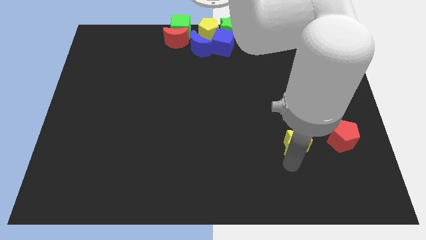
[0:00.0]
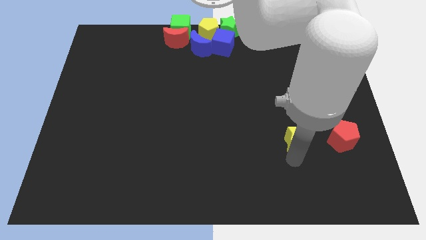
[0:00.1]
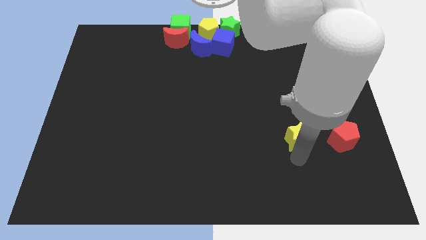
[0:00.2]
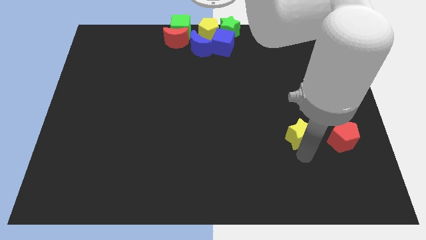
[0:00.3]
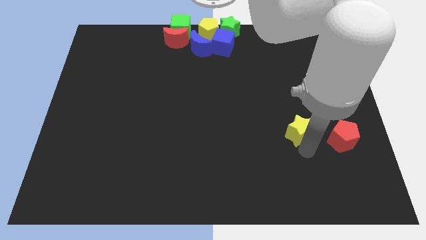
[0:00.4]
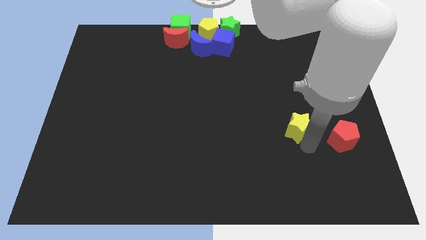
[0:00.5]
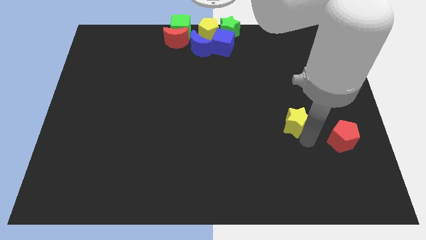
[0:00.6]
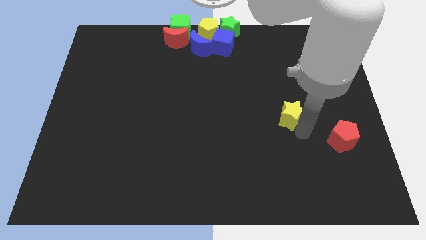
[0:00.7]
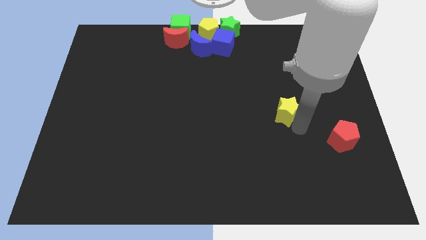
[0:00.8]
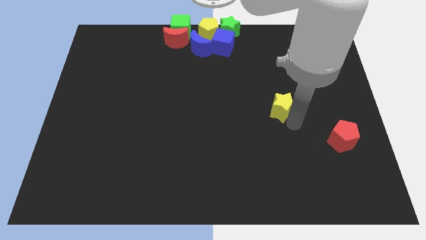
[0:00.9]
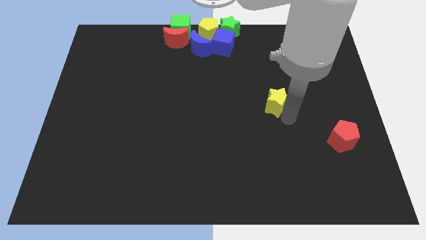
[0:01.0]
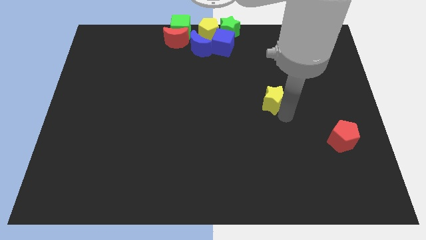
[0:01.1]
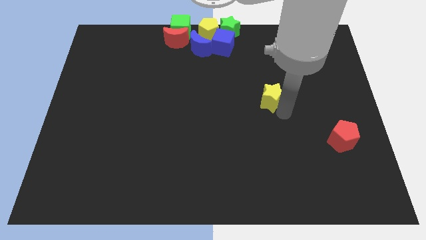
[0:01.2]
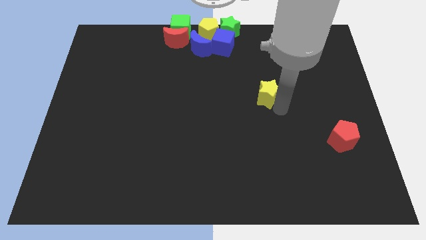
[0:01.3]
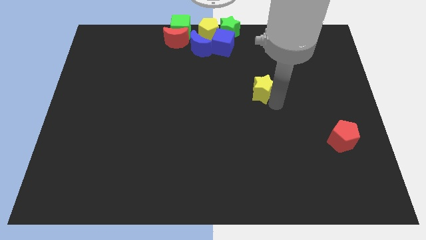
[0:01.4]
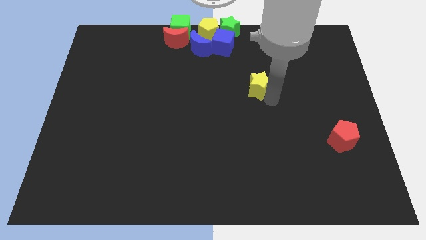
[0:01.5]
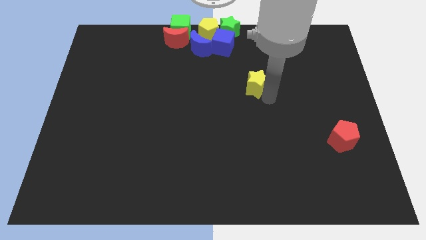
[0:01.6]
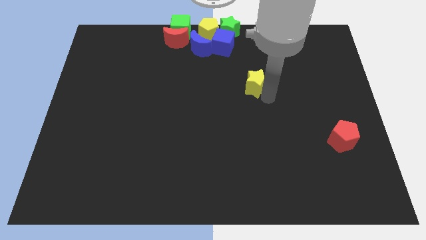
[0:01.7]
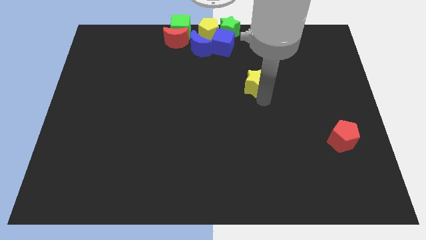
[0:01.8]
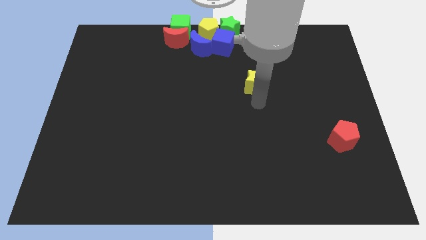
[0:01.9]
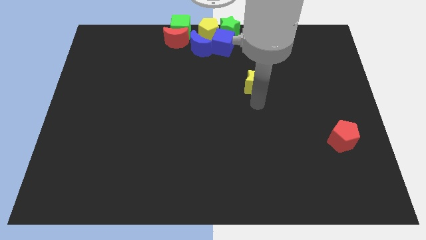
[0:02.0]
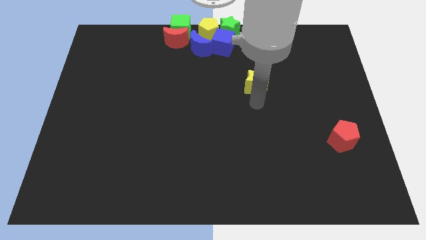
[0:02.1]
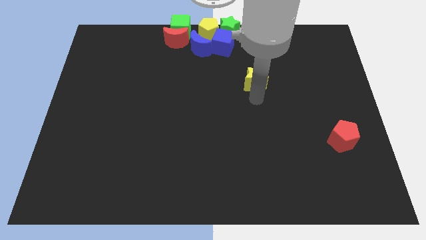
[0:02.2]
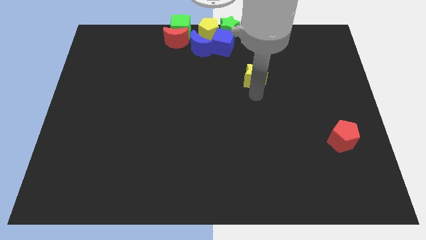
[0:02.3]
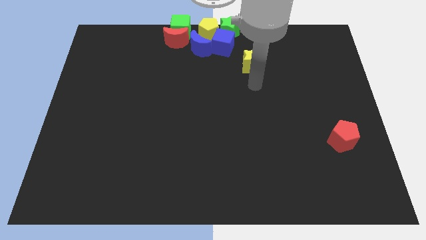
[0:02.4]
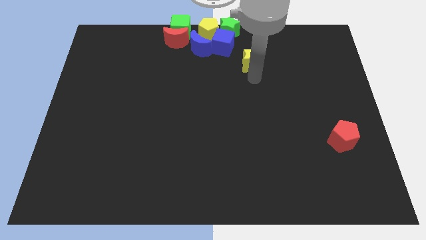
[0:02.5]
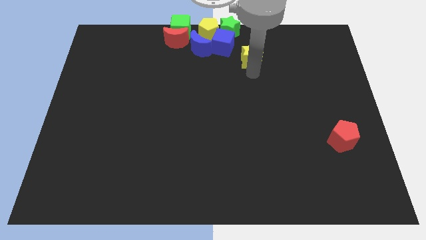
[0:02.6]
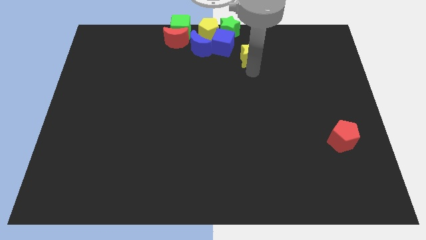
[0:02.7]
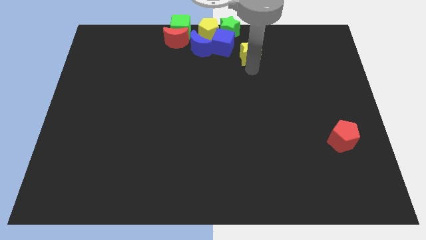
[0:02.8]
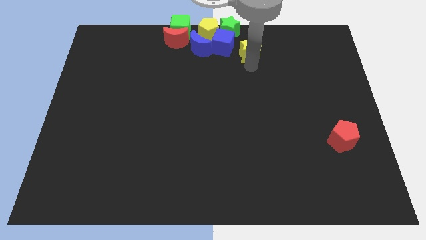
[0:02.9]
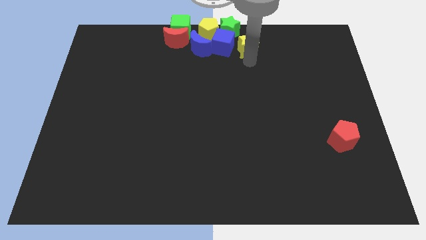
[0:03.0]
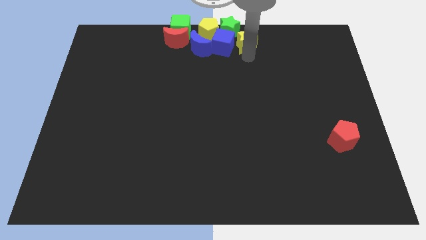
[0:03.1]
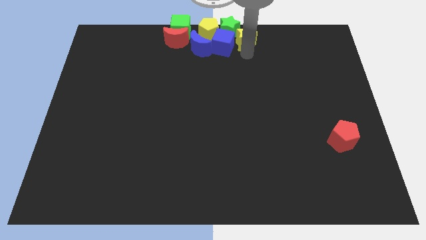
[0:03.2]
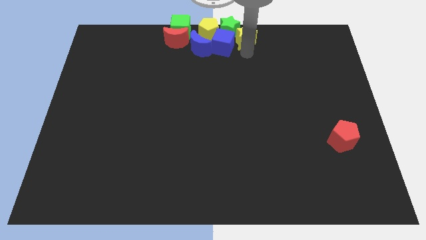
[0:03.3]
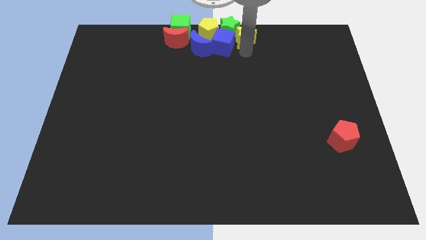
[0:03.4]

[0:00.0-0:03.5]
push yellow star into the group of blocks at the top

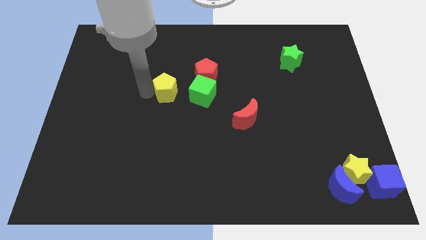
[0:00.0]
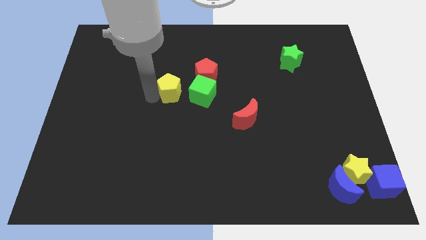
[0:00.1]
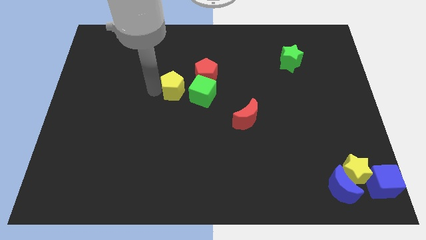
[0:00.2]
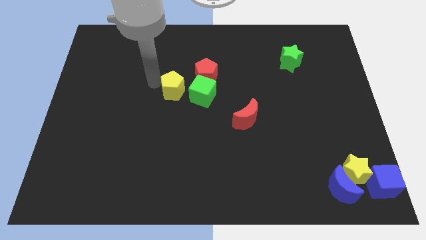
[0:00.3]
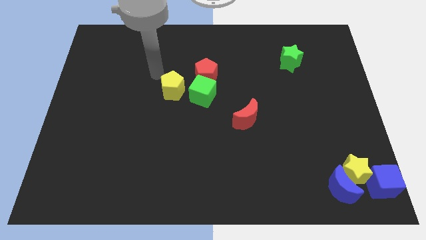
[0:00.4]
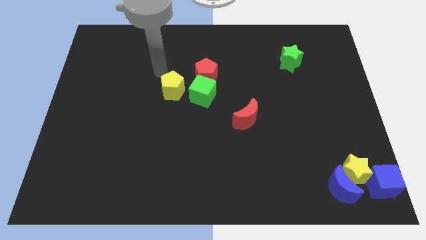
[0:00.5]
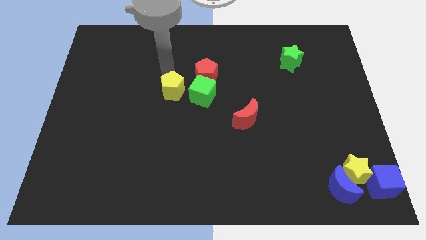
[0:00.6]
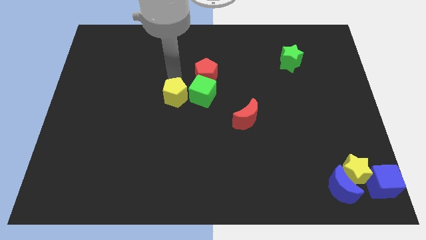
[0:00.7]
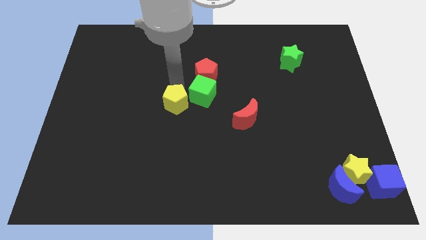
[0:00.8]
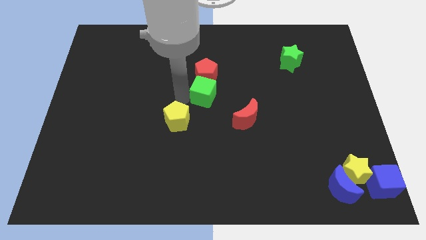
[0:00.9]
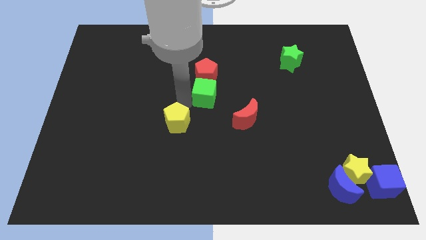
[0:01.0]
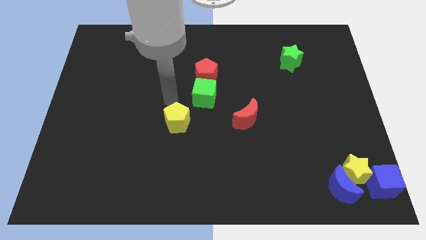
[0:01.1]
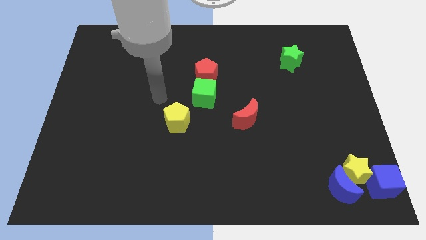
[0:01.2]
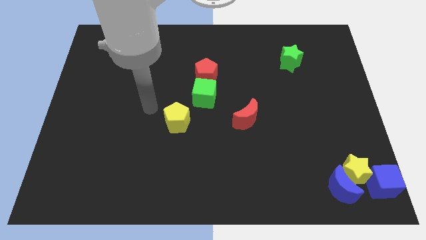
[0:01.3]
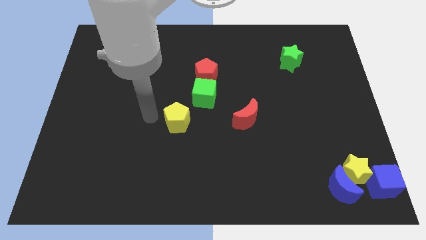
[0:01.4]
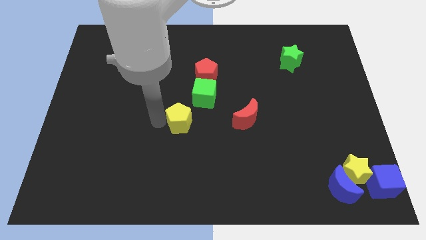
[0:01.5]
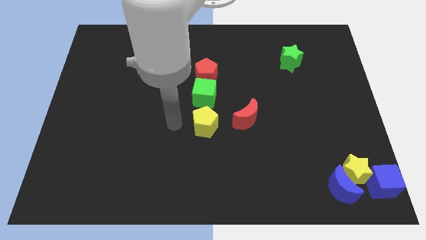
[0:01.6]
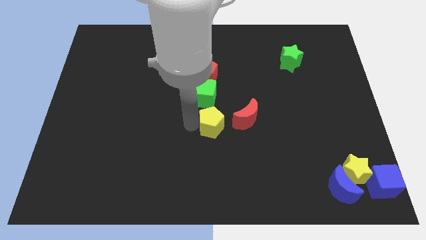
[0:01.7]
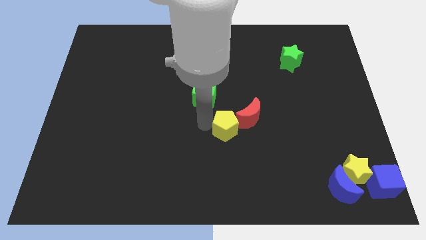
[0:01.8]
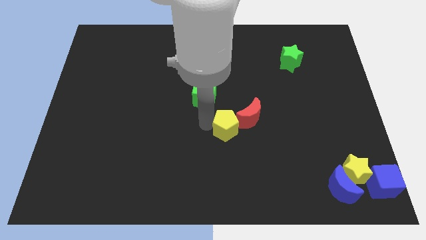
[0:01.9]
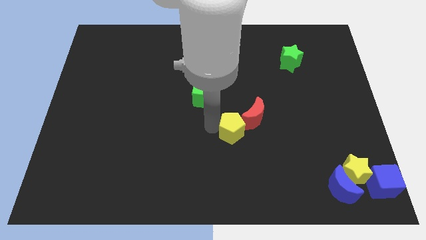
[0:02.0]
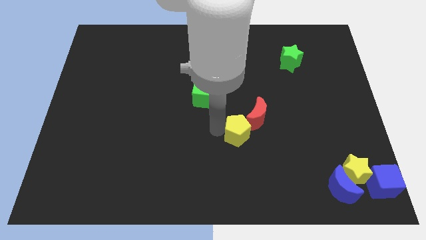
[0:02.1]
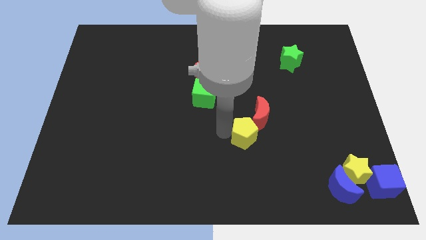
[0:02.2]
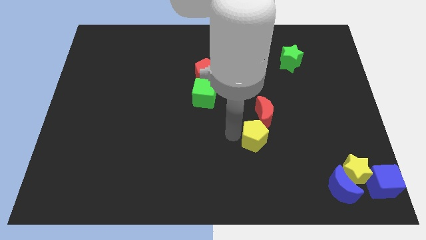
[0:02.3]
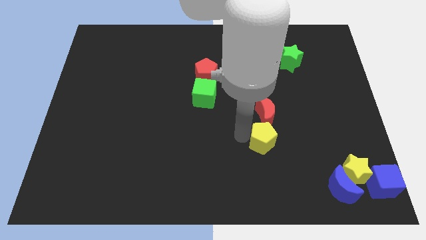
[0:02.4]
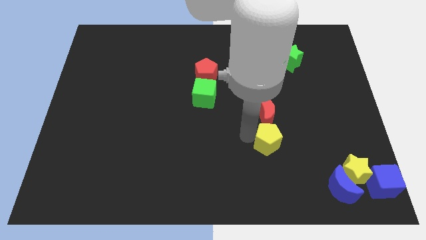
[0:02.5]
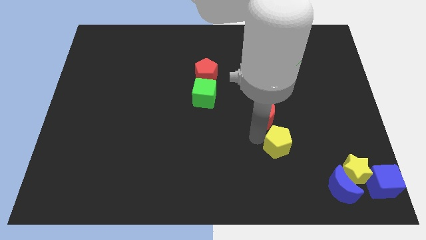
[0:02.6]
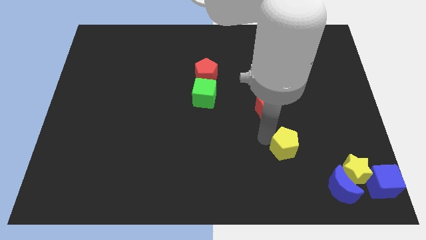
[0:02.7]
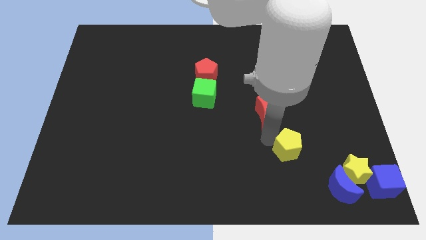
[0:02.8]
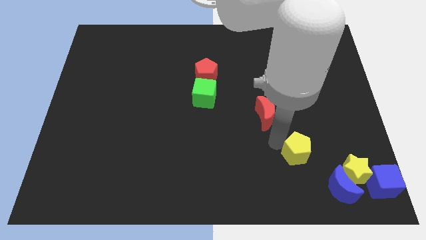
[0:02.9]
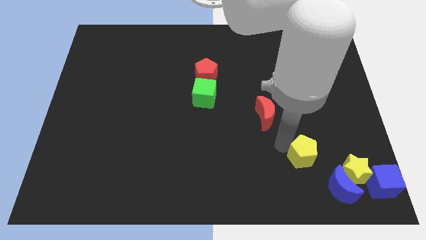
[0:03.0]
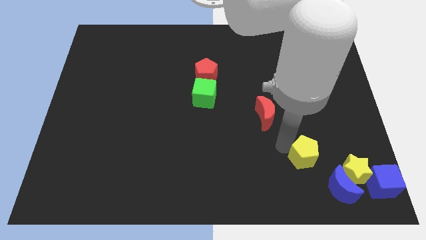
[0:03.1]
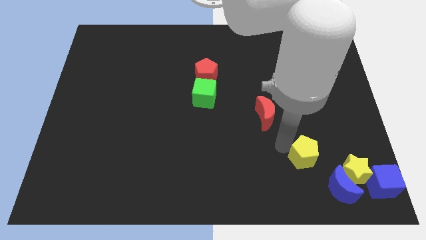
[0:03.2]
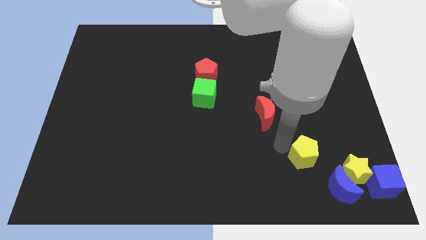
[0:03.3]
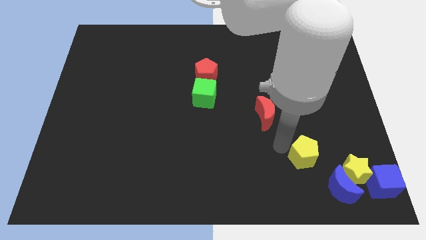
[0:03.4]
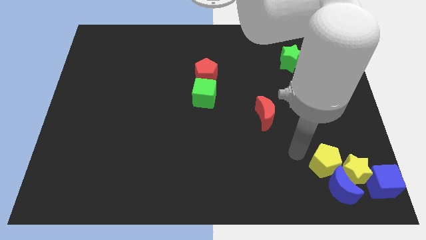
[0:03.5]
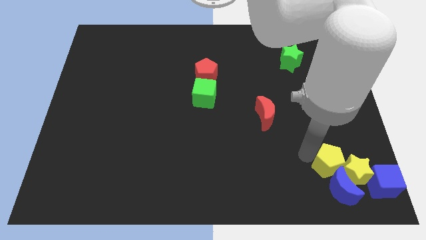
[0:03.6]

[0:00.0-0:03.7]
move the yellow pentagon to the top of the blue crescent

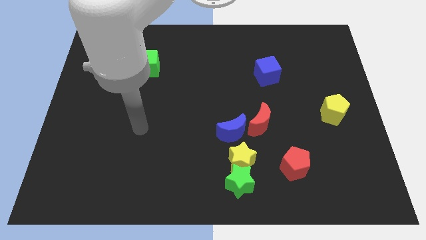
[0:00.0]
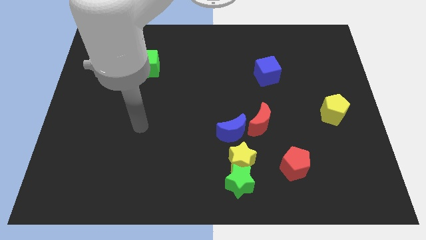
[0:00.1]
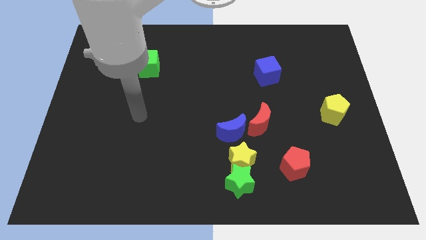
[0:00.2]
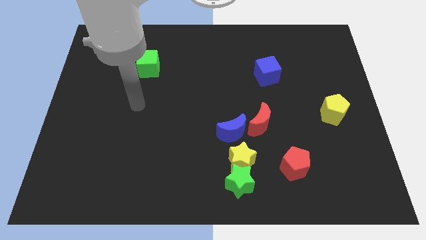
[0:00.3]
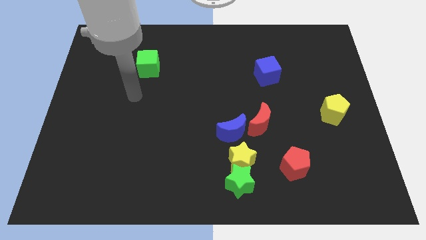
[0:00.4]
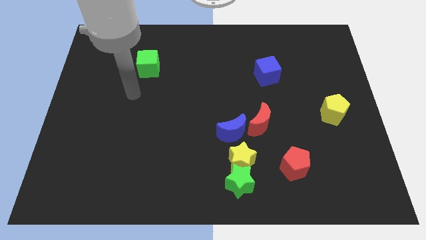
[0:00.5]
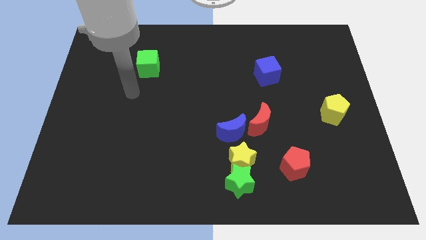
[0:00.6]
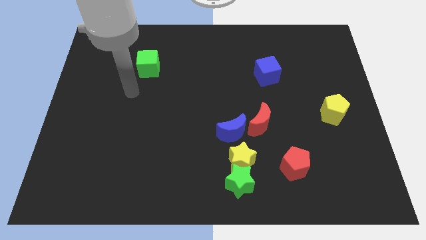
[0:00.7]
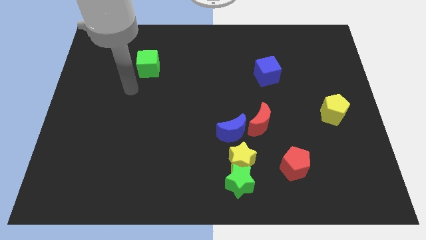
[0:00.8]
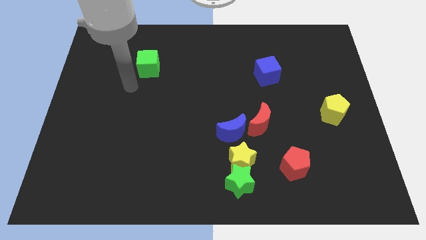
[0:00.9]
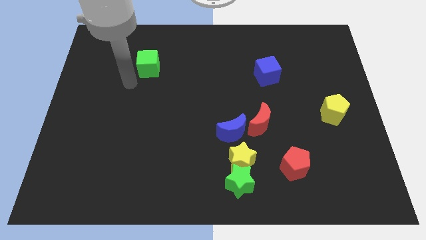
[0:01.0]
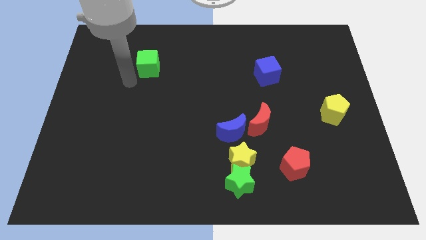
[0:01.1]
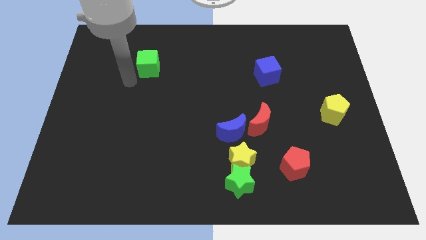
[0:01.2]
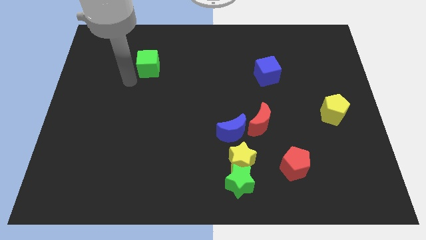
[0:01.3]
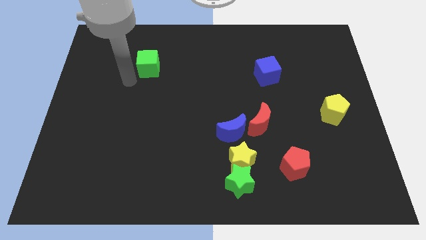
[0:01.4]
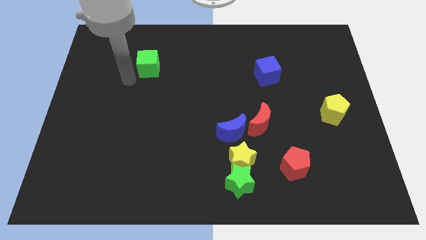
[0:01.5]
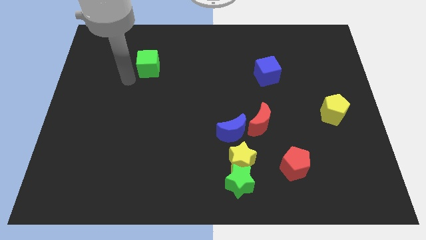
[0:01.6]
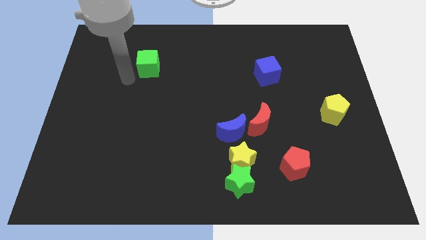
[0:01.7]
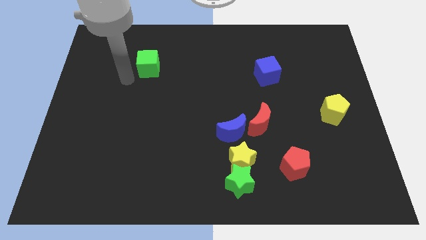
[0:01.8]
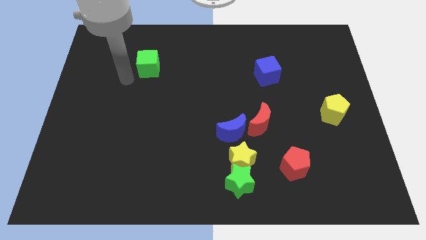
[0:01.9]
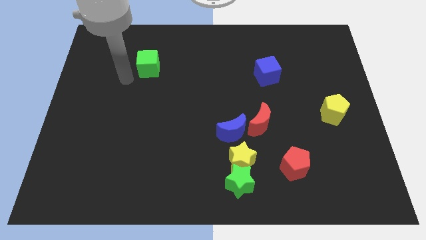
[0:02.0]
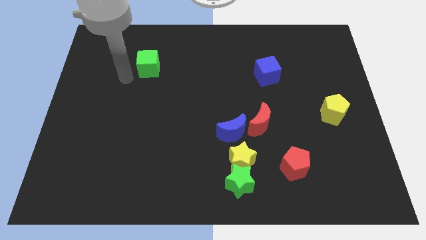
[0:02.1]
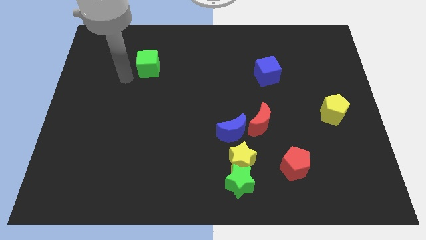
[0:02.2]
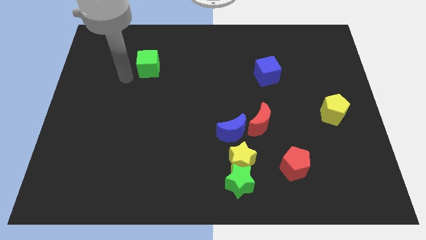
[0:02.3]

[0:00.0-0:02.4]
place the arm to left side of the green cube
